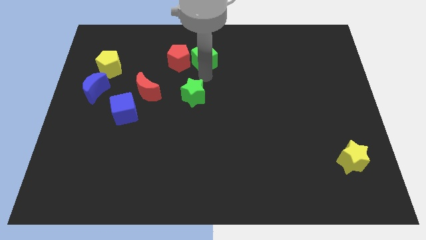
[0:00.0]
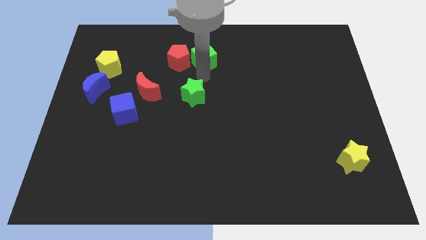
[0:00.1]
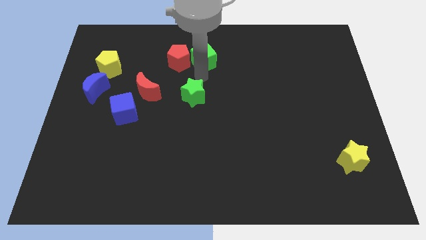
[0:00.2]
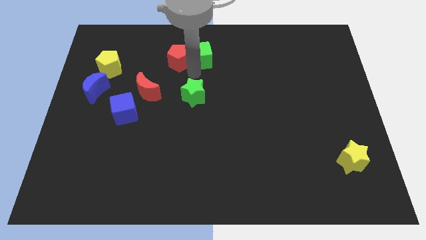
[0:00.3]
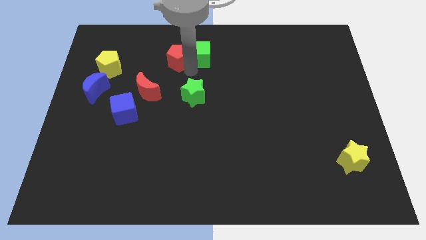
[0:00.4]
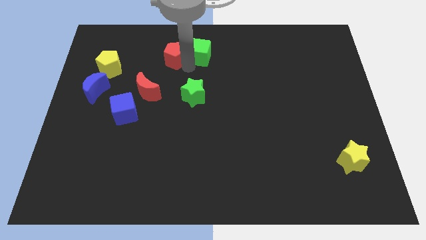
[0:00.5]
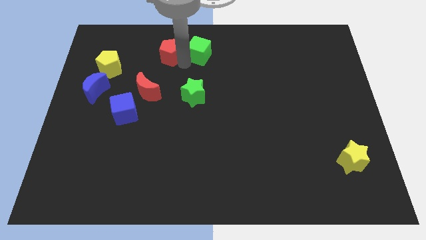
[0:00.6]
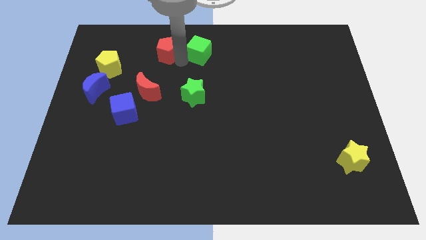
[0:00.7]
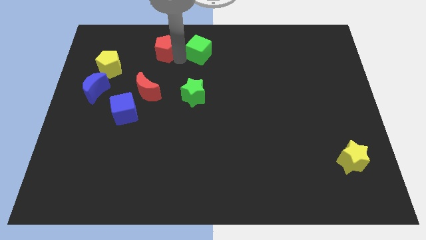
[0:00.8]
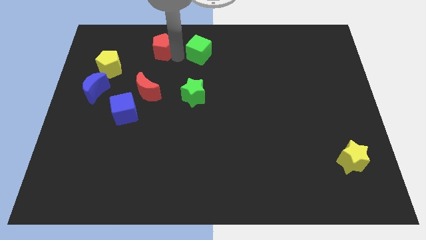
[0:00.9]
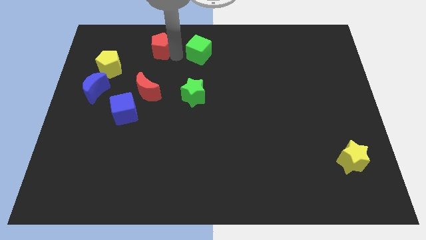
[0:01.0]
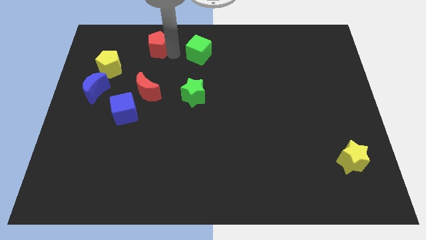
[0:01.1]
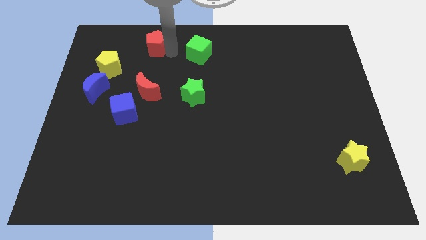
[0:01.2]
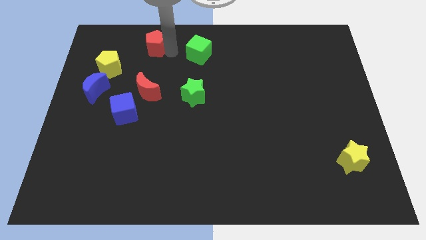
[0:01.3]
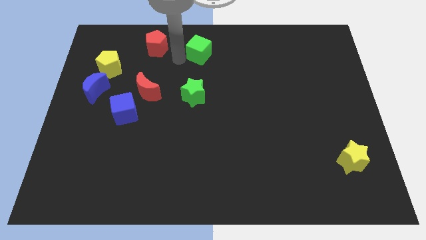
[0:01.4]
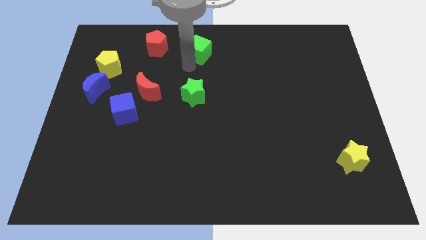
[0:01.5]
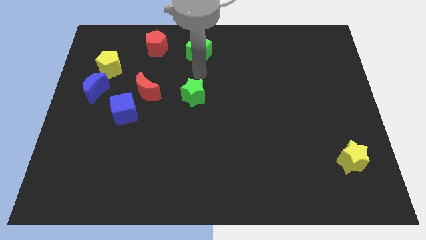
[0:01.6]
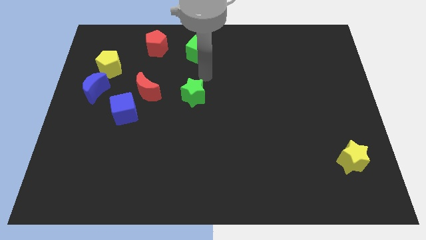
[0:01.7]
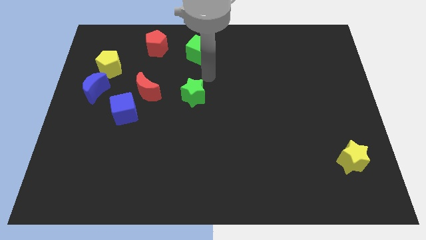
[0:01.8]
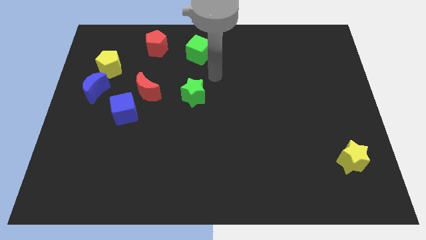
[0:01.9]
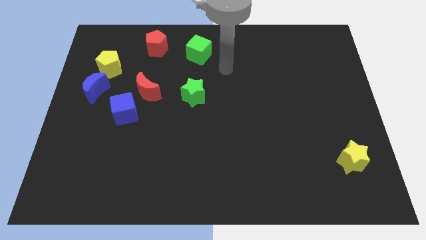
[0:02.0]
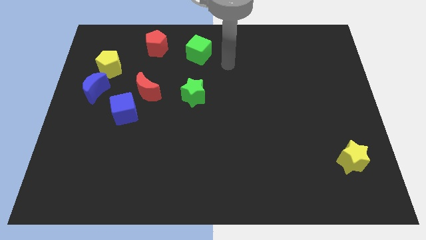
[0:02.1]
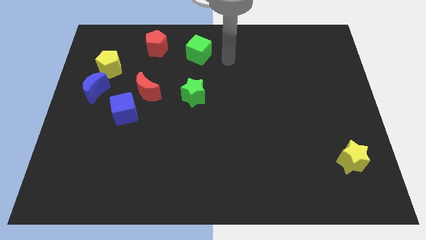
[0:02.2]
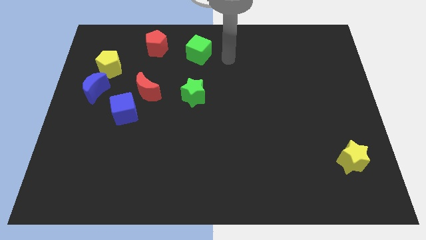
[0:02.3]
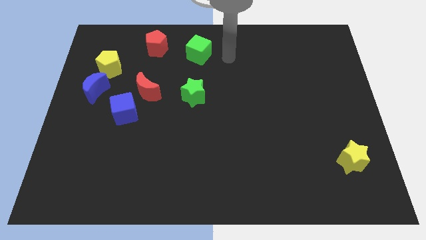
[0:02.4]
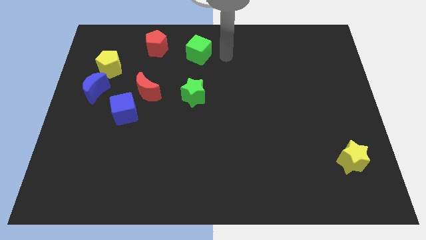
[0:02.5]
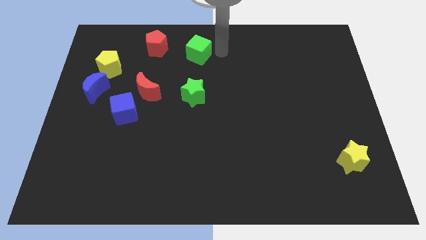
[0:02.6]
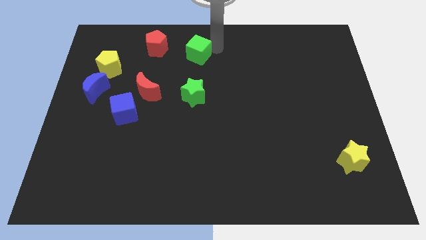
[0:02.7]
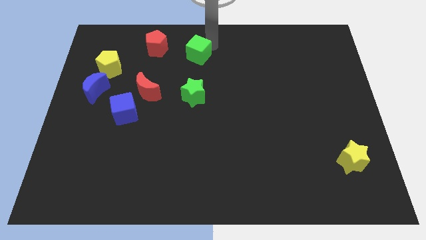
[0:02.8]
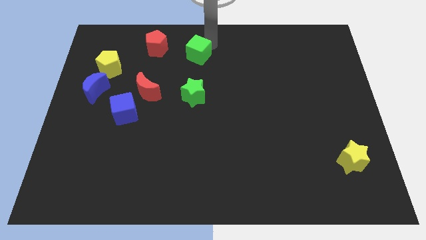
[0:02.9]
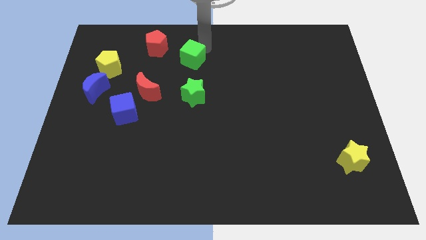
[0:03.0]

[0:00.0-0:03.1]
separate the red pentagon and move away

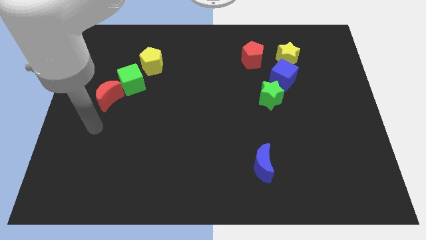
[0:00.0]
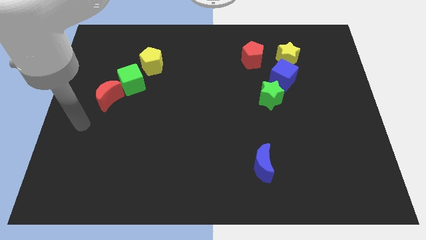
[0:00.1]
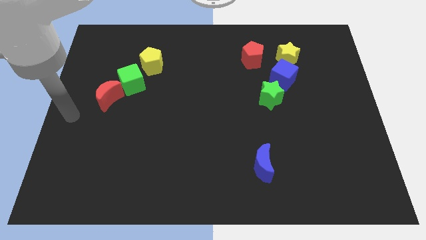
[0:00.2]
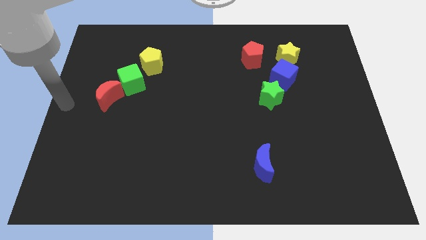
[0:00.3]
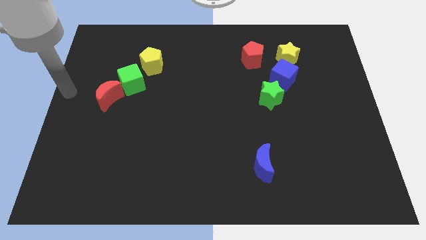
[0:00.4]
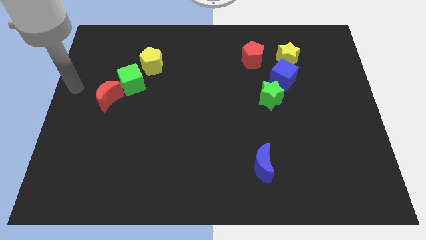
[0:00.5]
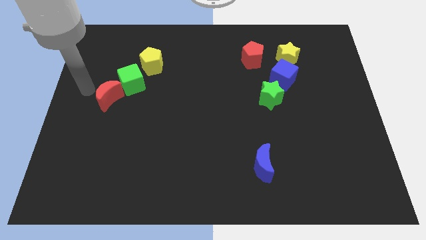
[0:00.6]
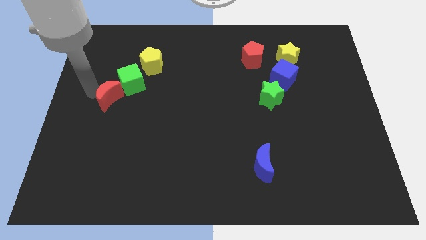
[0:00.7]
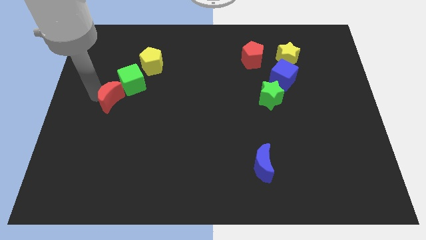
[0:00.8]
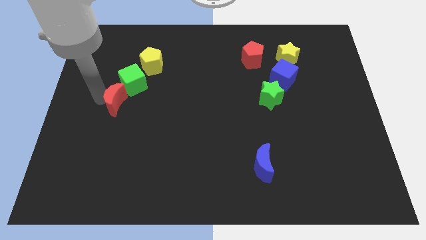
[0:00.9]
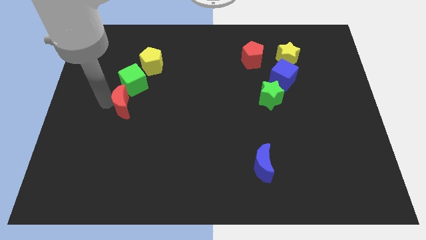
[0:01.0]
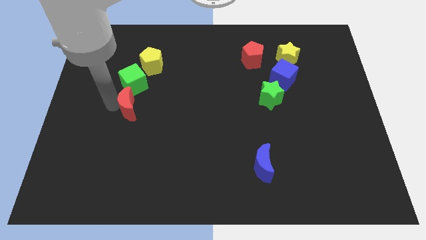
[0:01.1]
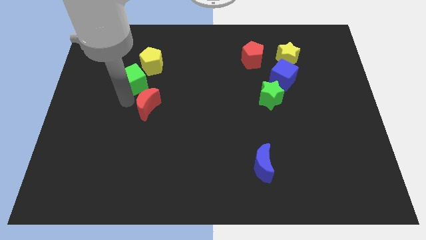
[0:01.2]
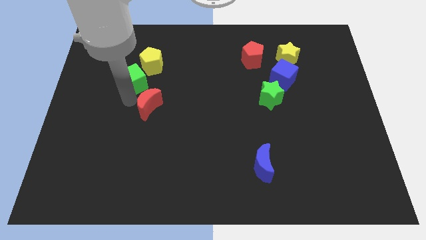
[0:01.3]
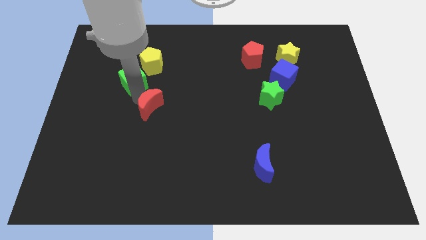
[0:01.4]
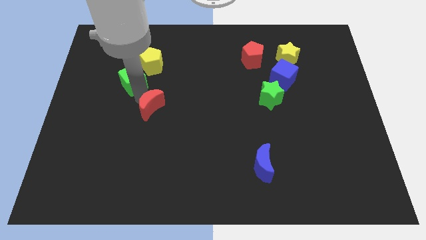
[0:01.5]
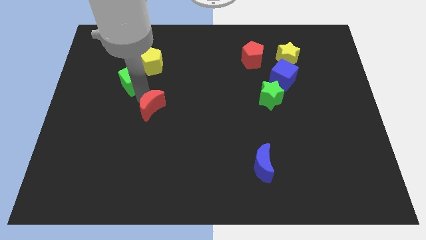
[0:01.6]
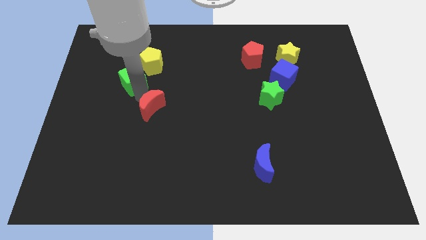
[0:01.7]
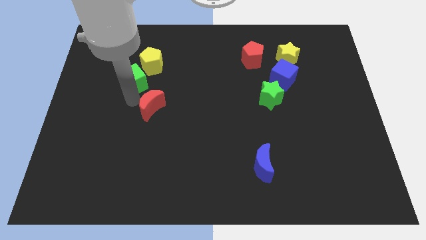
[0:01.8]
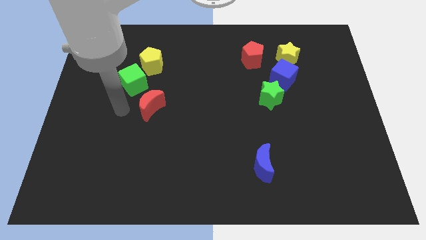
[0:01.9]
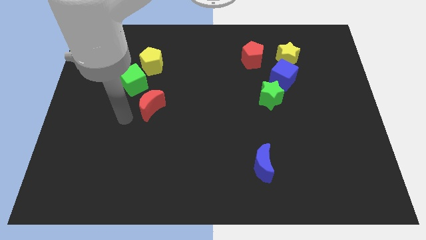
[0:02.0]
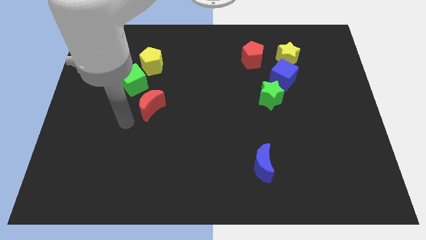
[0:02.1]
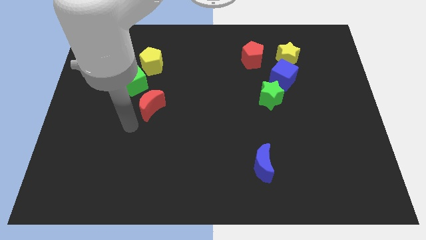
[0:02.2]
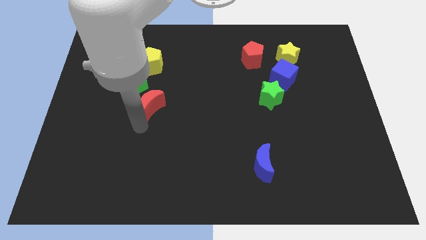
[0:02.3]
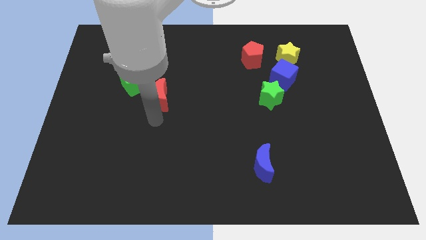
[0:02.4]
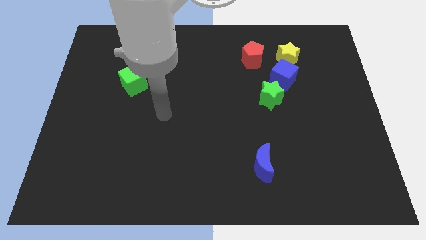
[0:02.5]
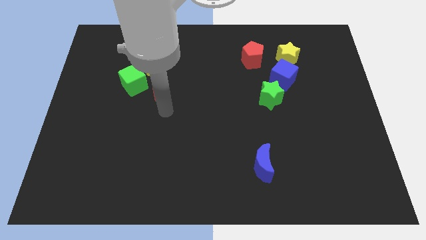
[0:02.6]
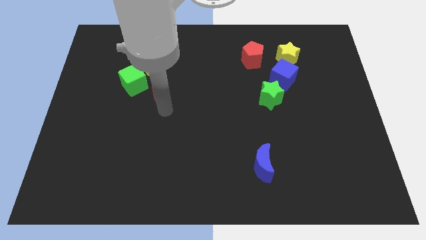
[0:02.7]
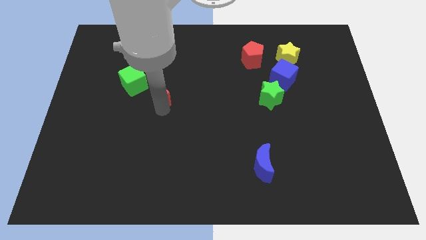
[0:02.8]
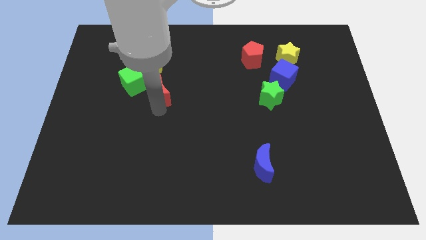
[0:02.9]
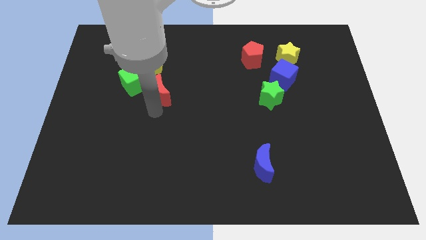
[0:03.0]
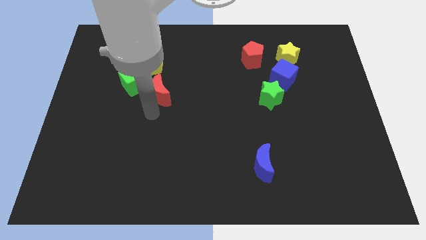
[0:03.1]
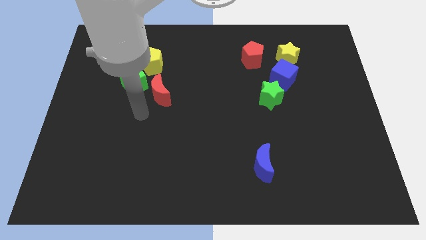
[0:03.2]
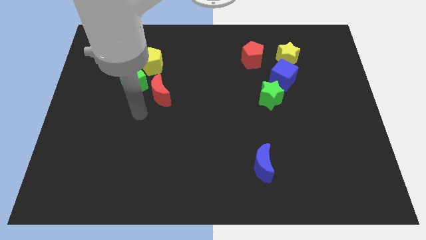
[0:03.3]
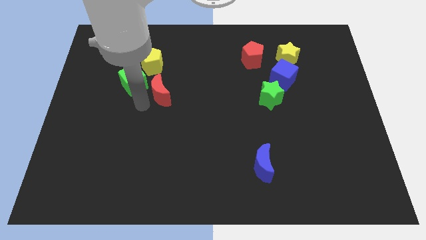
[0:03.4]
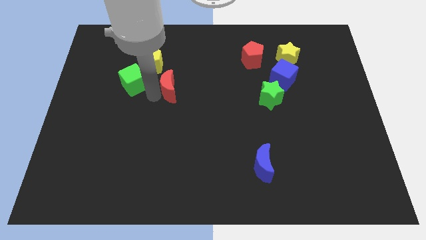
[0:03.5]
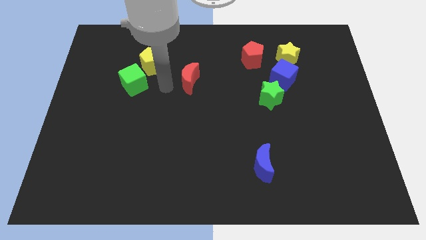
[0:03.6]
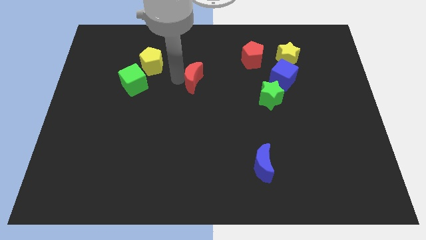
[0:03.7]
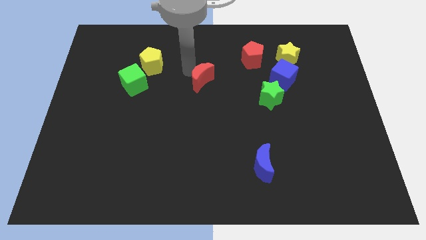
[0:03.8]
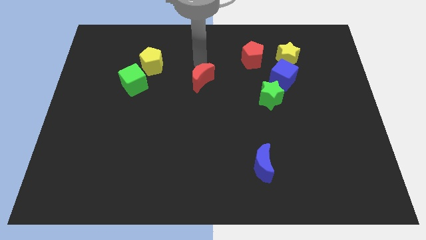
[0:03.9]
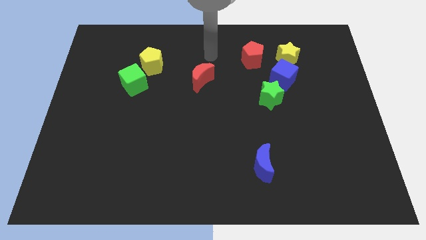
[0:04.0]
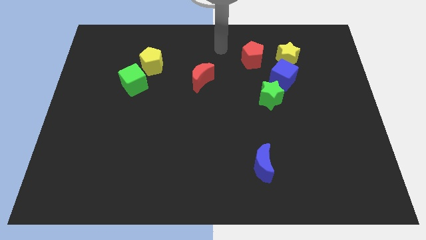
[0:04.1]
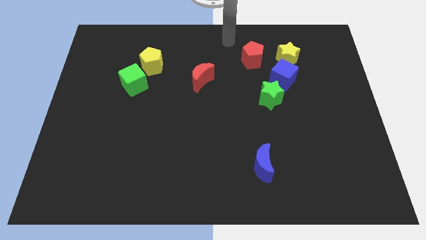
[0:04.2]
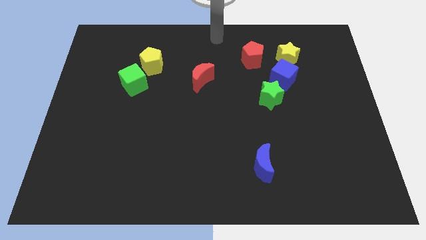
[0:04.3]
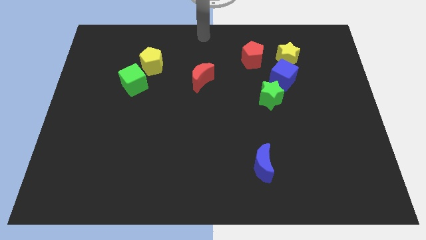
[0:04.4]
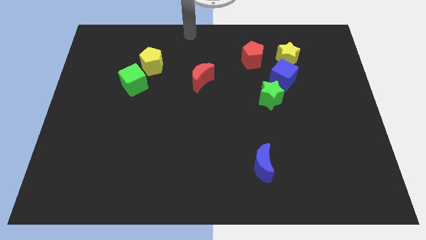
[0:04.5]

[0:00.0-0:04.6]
move the red crescent to the center

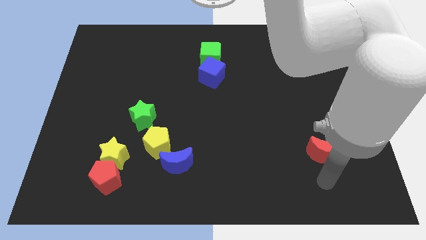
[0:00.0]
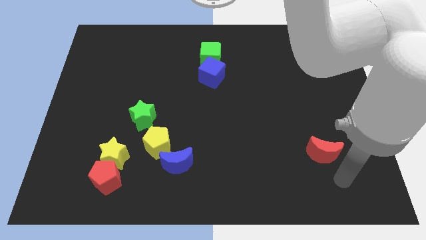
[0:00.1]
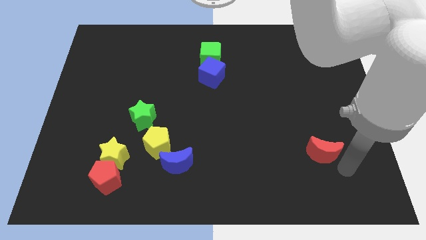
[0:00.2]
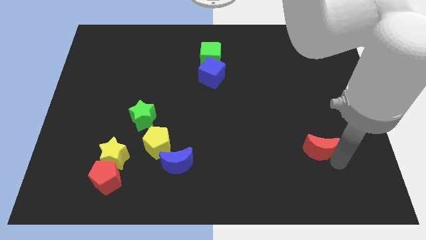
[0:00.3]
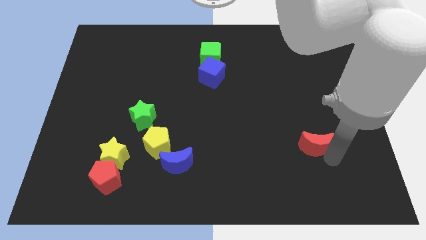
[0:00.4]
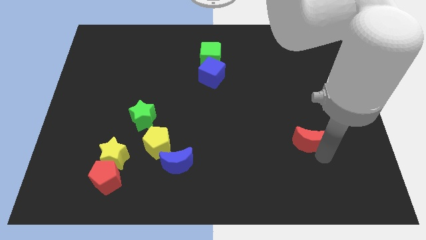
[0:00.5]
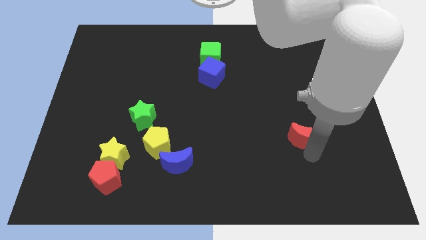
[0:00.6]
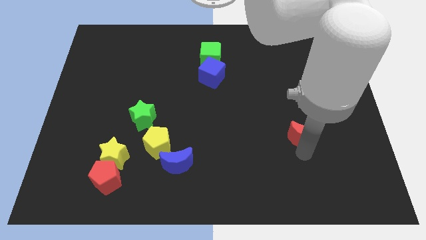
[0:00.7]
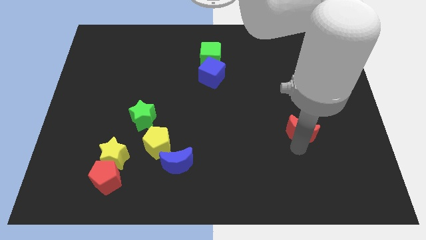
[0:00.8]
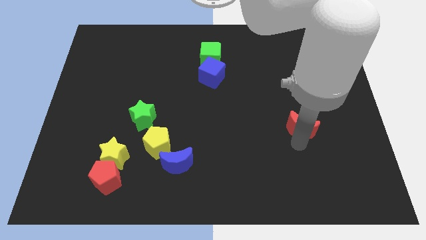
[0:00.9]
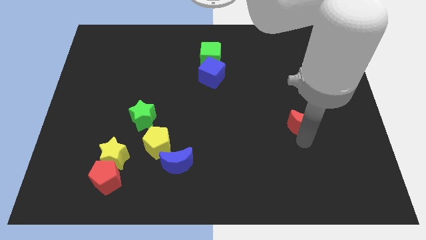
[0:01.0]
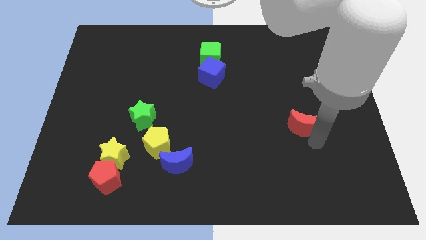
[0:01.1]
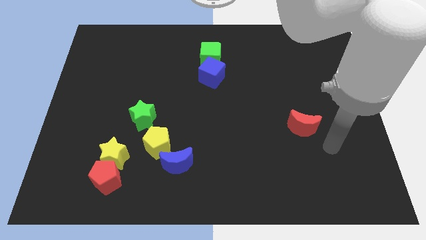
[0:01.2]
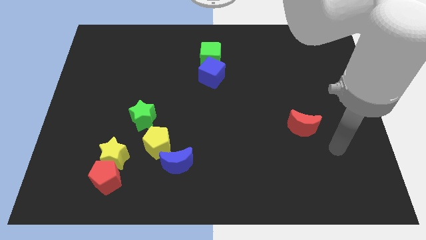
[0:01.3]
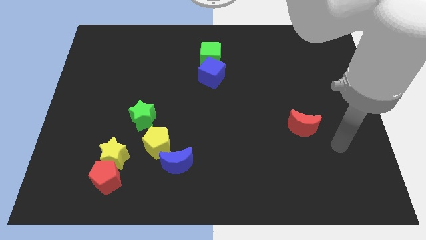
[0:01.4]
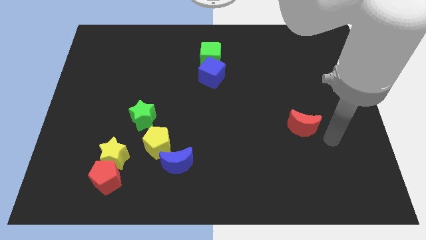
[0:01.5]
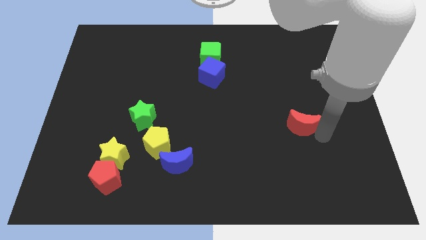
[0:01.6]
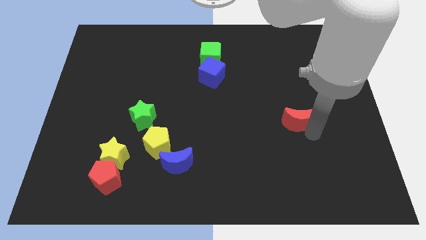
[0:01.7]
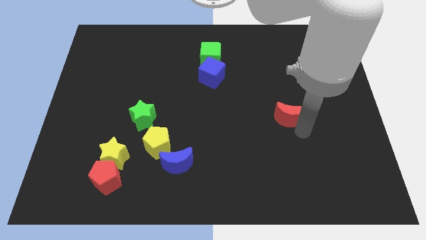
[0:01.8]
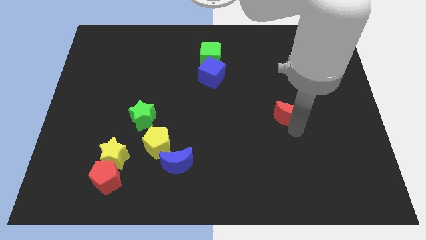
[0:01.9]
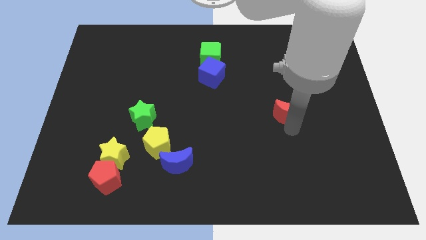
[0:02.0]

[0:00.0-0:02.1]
move red crescent towards upside of the board
